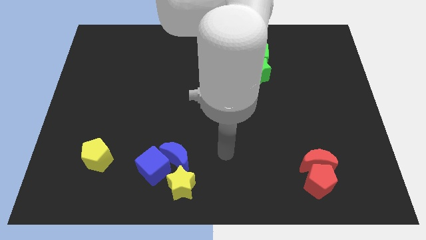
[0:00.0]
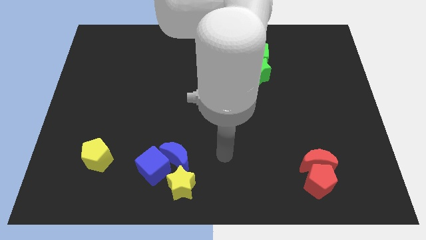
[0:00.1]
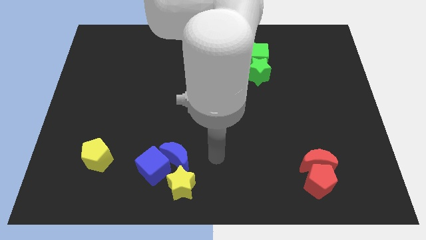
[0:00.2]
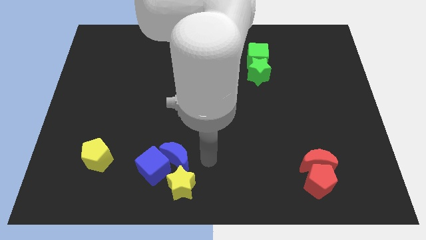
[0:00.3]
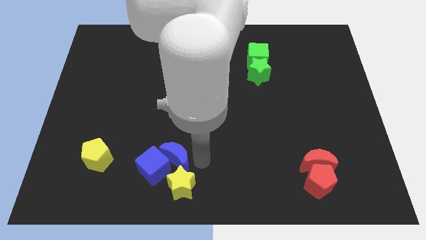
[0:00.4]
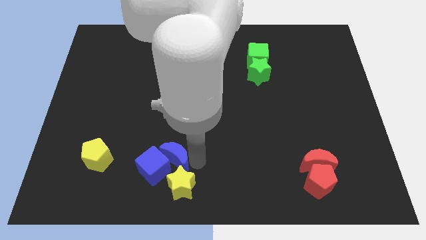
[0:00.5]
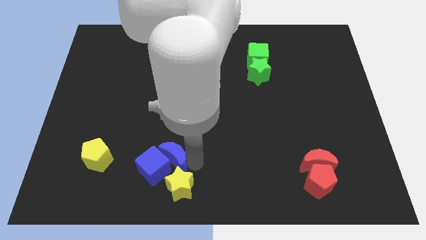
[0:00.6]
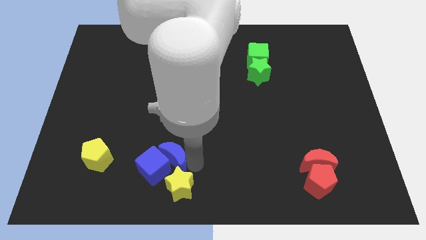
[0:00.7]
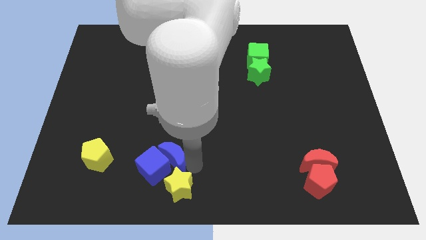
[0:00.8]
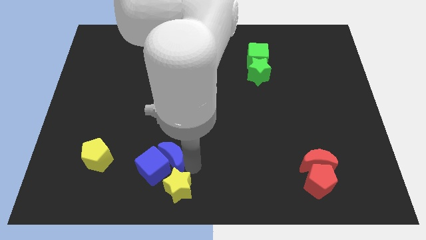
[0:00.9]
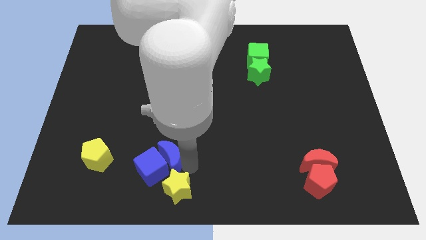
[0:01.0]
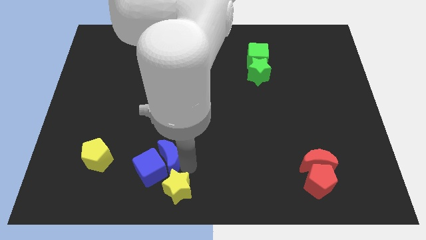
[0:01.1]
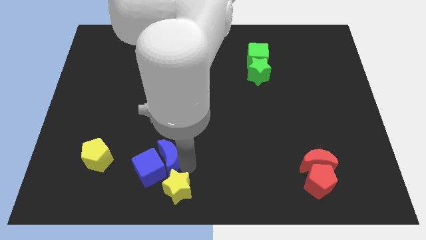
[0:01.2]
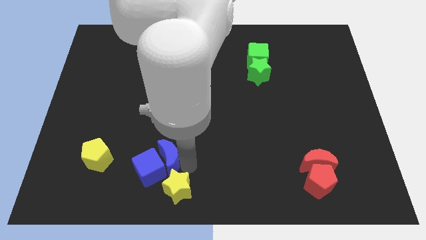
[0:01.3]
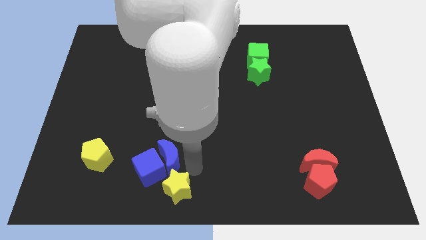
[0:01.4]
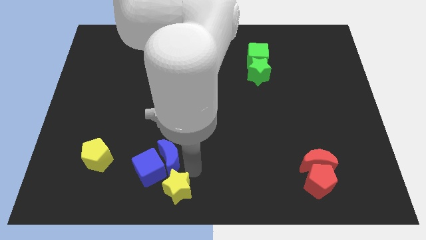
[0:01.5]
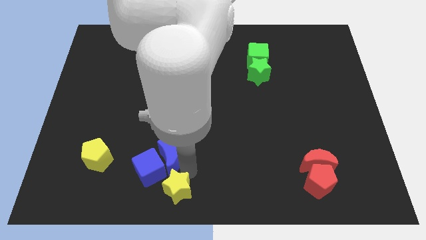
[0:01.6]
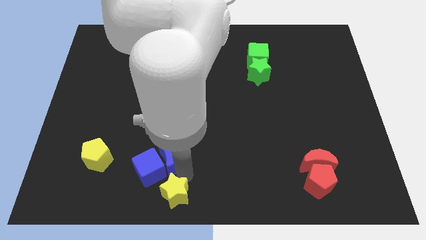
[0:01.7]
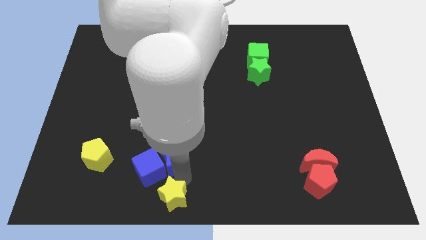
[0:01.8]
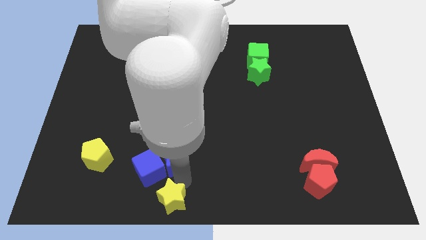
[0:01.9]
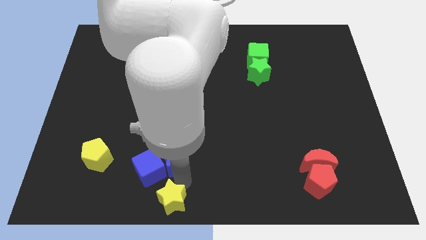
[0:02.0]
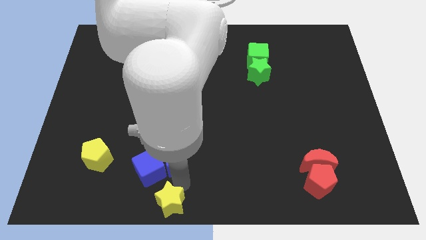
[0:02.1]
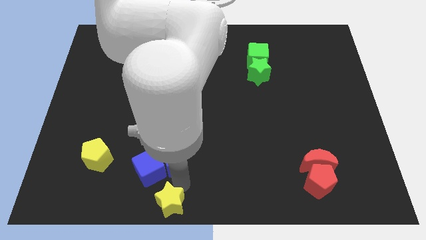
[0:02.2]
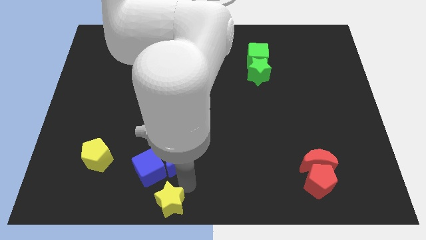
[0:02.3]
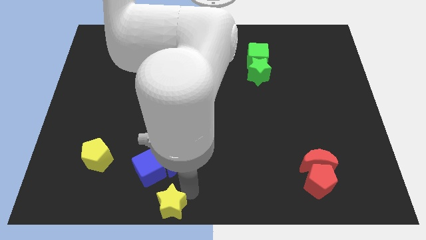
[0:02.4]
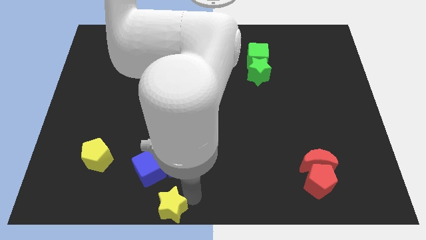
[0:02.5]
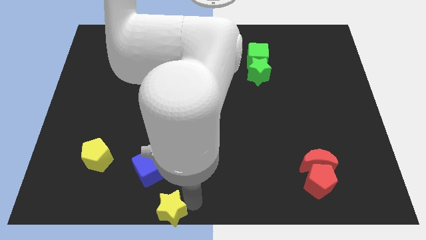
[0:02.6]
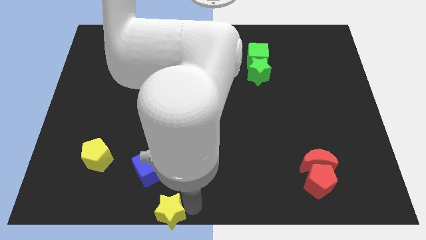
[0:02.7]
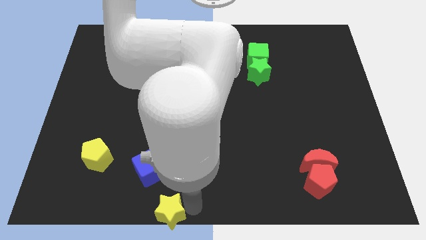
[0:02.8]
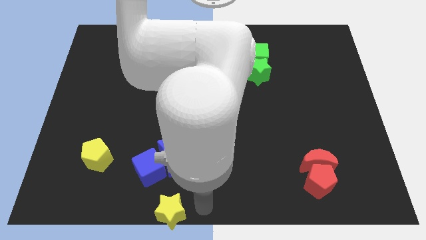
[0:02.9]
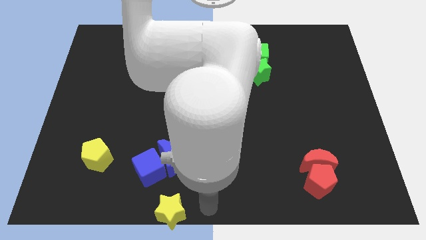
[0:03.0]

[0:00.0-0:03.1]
slide yellow star to the bottom center

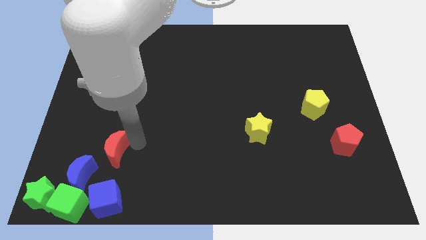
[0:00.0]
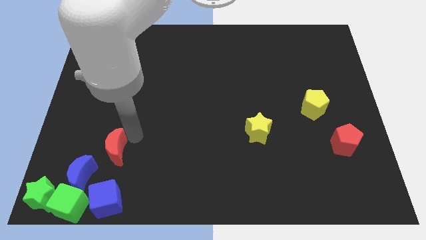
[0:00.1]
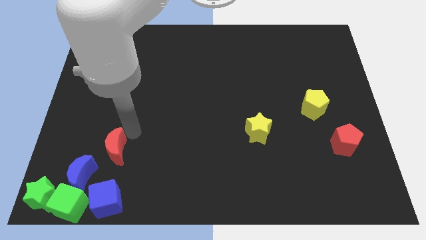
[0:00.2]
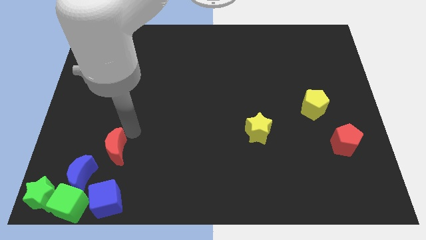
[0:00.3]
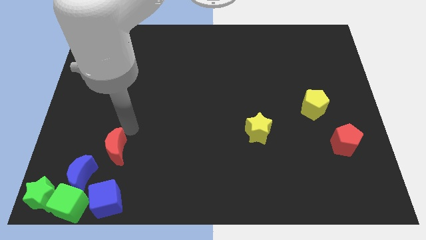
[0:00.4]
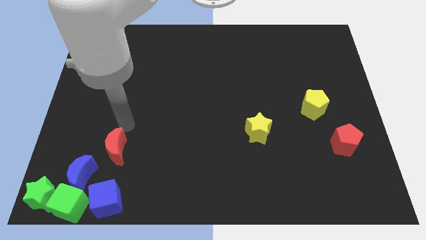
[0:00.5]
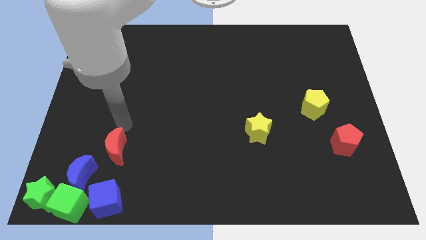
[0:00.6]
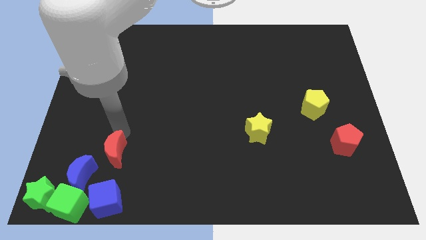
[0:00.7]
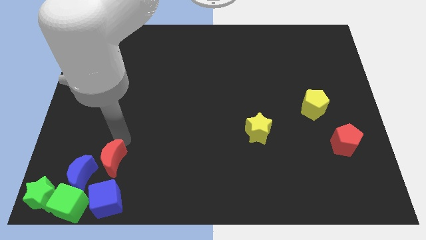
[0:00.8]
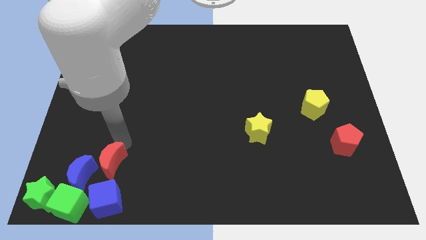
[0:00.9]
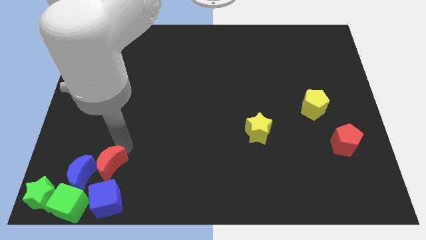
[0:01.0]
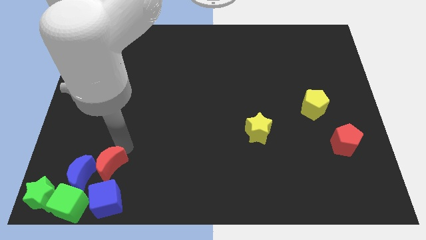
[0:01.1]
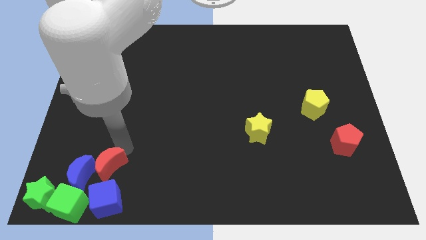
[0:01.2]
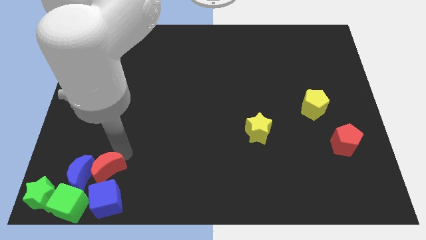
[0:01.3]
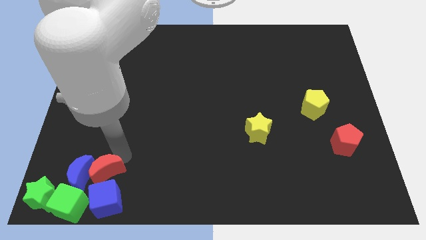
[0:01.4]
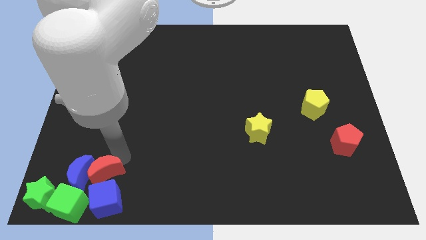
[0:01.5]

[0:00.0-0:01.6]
place the red moon above the blue cube

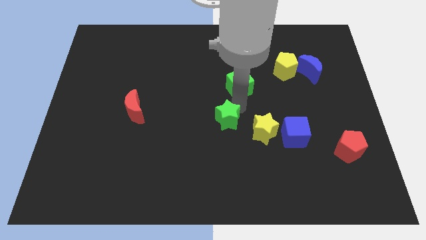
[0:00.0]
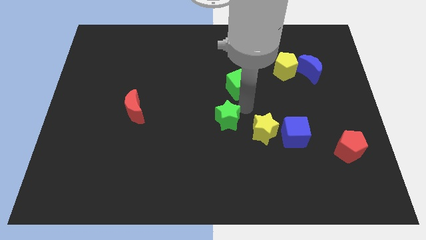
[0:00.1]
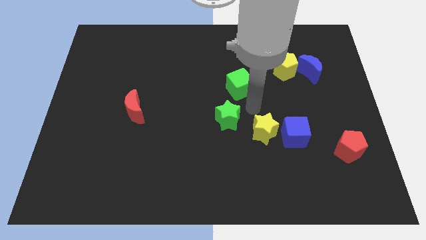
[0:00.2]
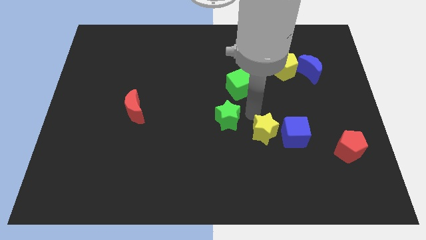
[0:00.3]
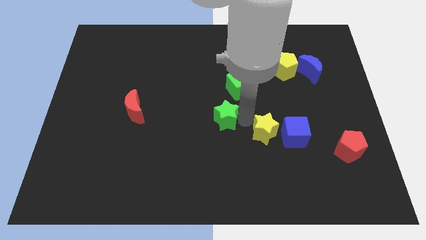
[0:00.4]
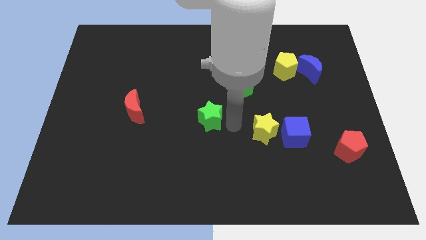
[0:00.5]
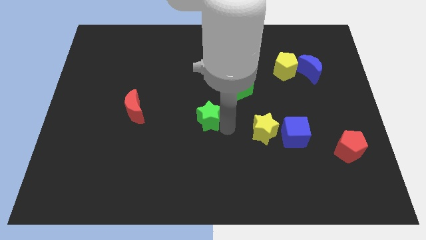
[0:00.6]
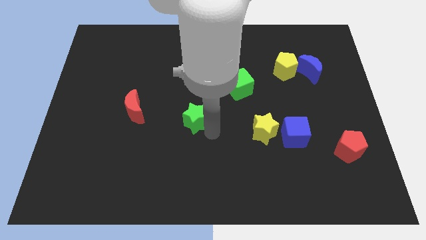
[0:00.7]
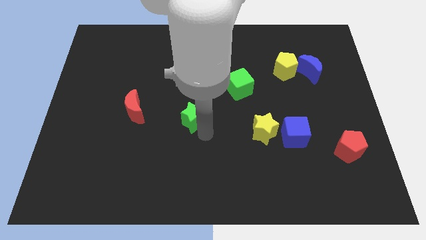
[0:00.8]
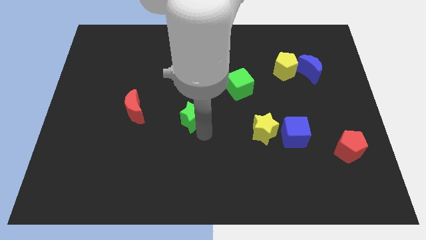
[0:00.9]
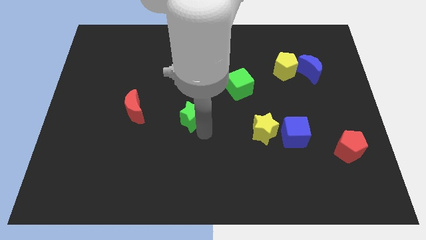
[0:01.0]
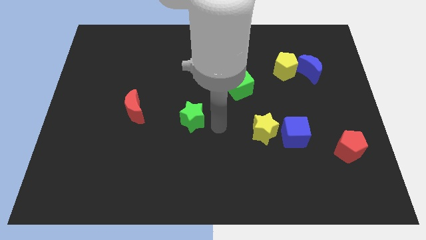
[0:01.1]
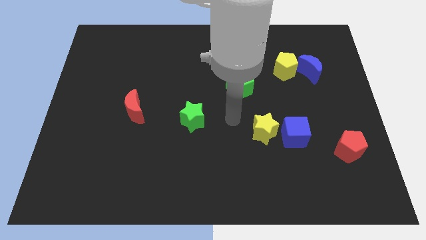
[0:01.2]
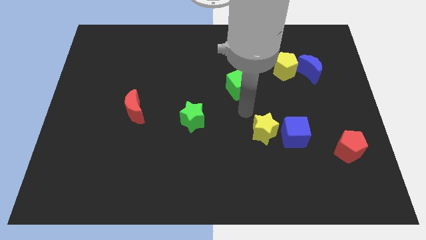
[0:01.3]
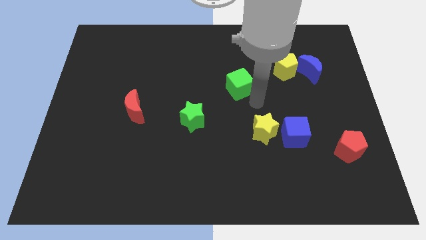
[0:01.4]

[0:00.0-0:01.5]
move the green star to the parallel right of the red moon

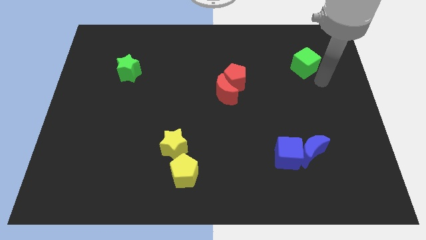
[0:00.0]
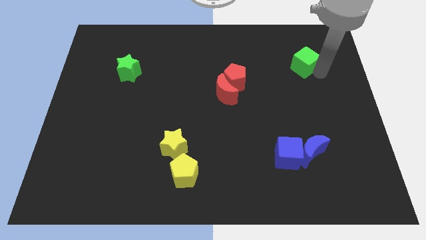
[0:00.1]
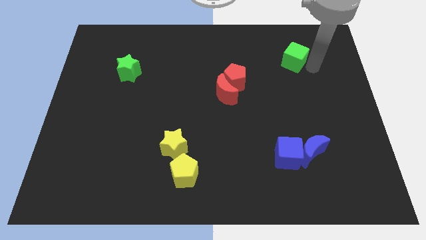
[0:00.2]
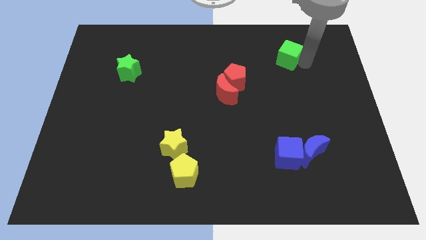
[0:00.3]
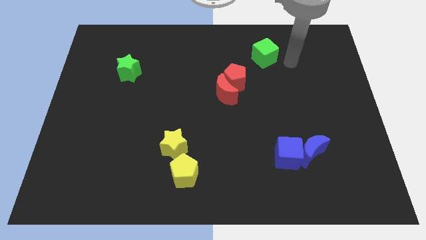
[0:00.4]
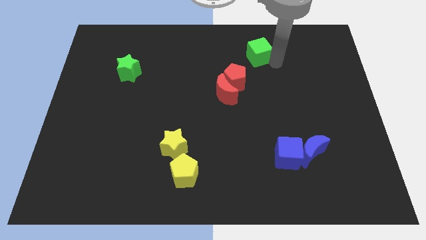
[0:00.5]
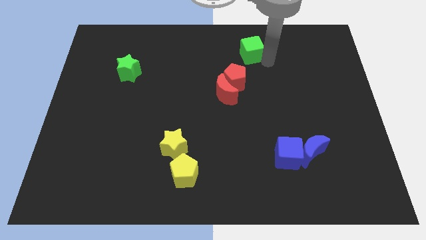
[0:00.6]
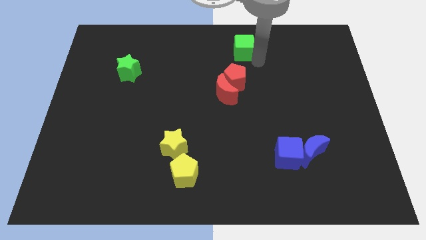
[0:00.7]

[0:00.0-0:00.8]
move the green cube towards the left

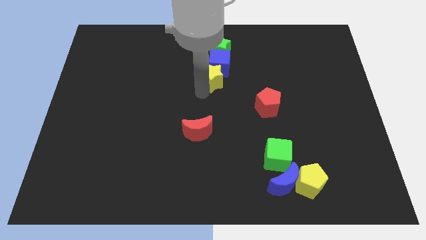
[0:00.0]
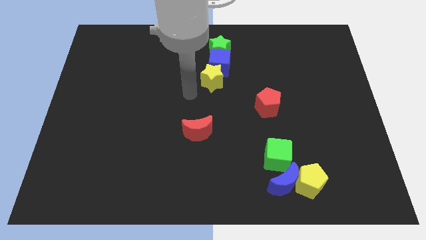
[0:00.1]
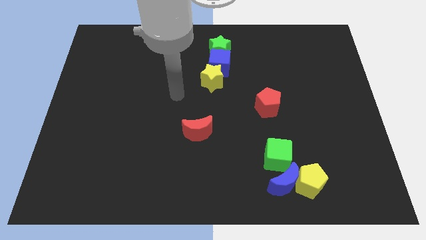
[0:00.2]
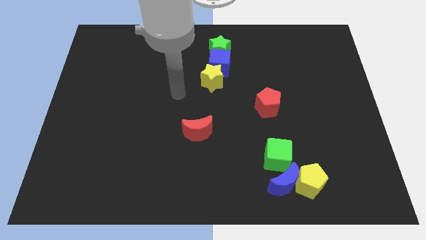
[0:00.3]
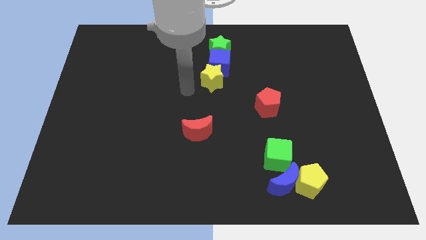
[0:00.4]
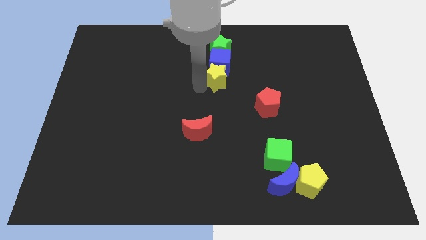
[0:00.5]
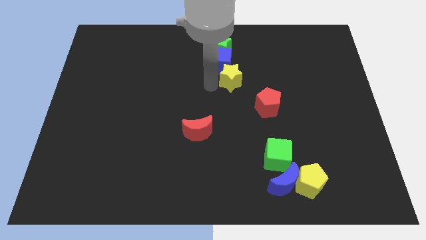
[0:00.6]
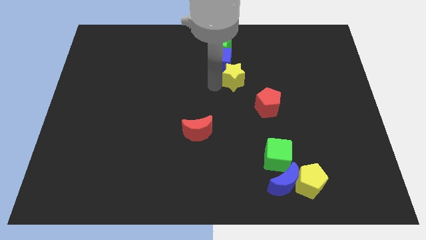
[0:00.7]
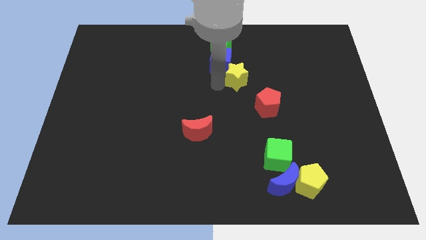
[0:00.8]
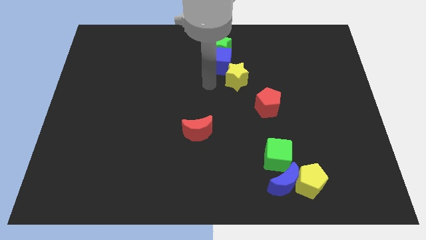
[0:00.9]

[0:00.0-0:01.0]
move yellow star slightly right

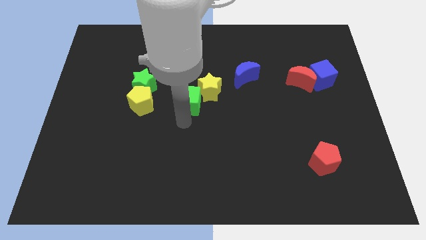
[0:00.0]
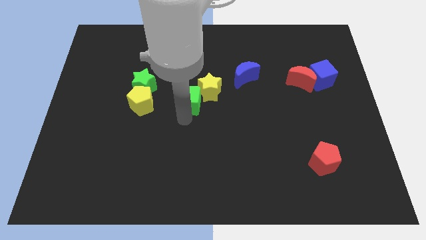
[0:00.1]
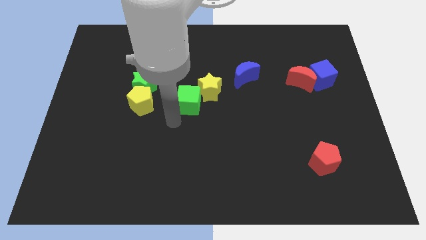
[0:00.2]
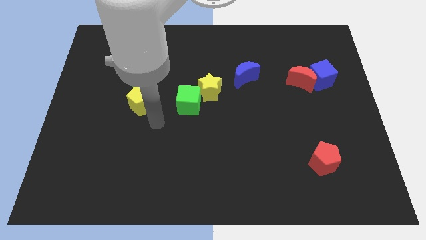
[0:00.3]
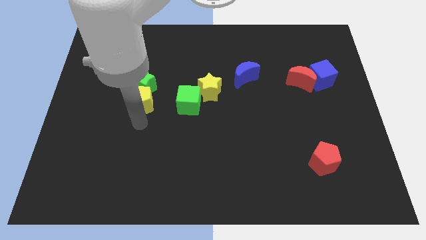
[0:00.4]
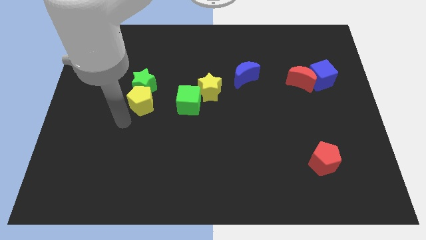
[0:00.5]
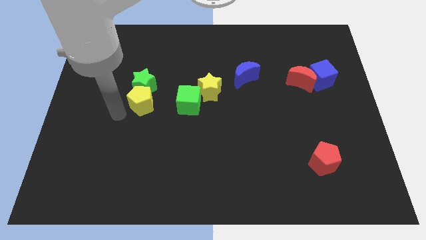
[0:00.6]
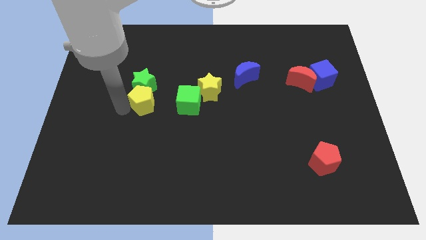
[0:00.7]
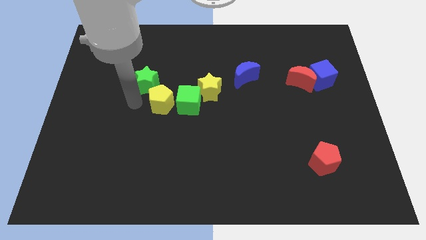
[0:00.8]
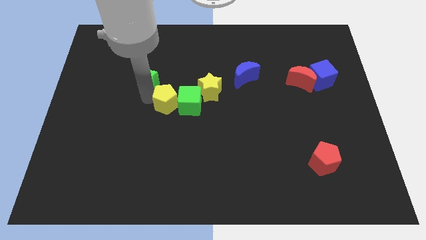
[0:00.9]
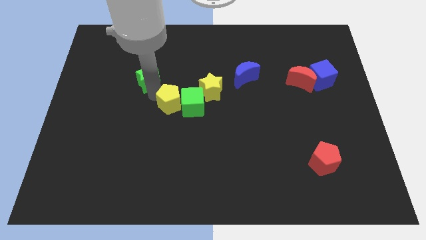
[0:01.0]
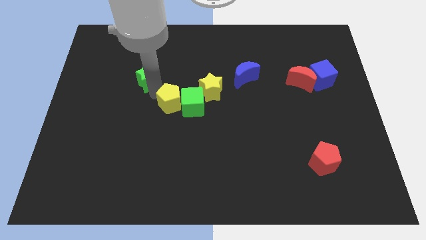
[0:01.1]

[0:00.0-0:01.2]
drag the yellow pentagon into the left side of the green cube
